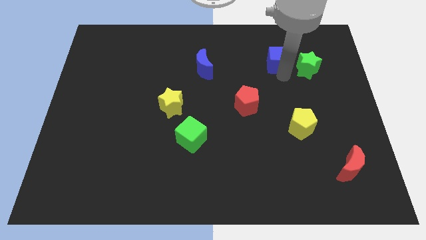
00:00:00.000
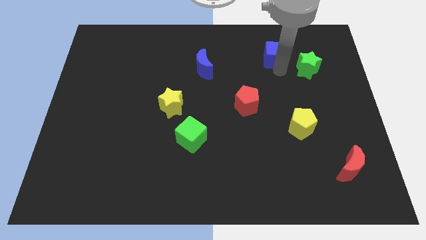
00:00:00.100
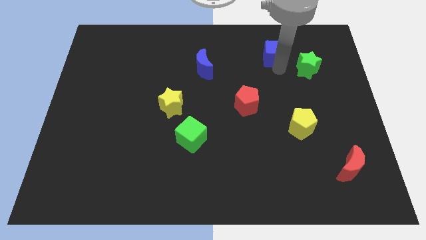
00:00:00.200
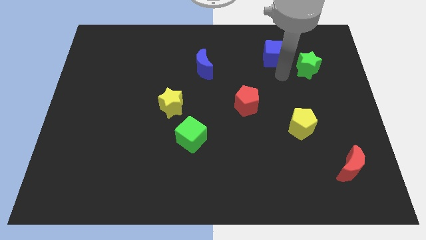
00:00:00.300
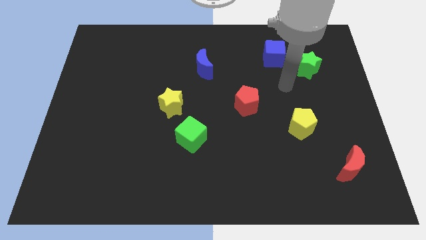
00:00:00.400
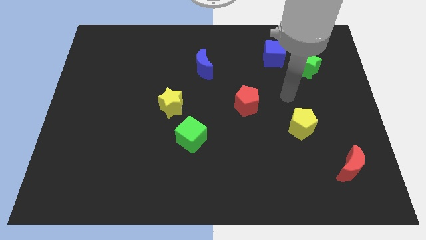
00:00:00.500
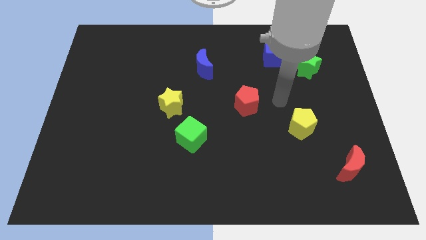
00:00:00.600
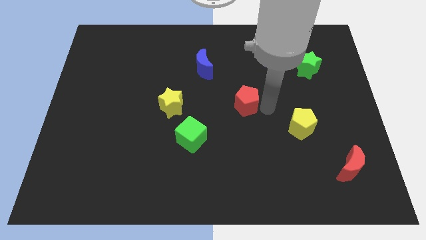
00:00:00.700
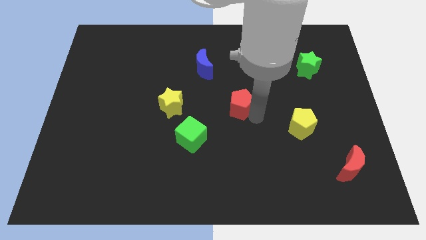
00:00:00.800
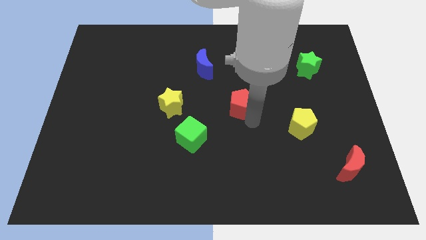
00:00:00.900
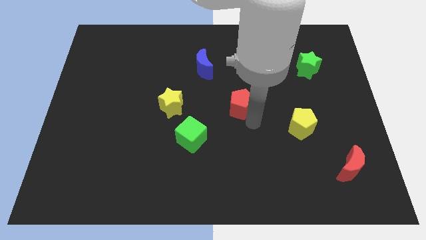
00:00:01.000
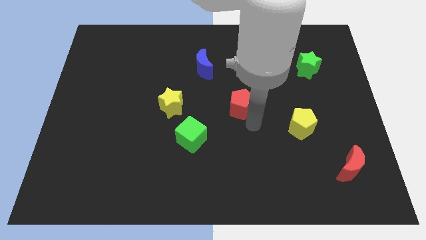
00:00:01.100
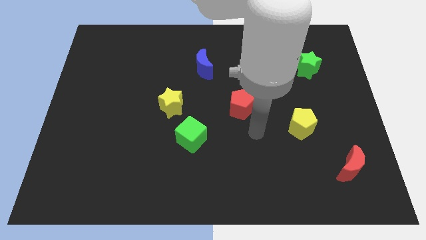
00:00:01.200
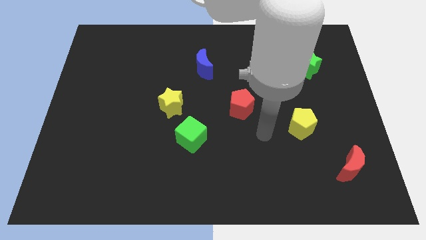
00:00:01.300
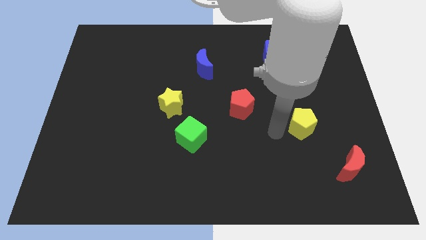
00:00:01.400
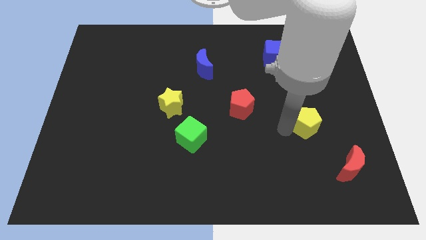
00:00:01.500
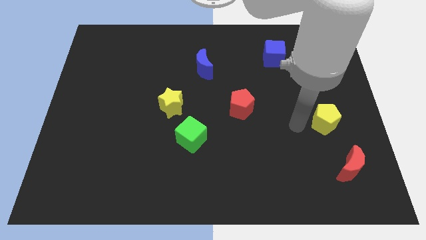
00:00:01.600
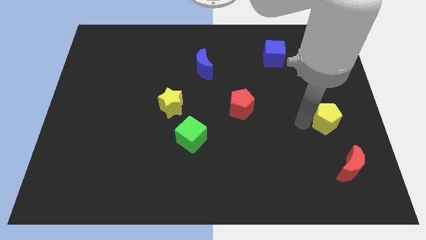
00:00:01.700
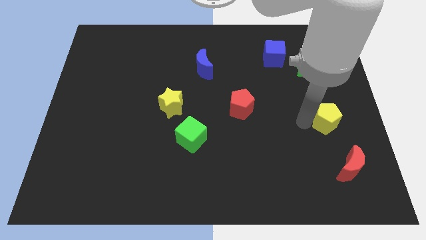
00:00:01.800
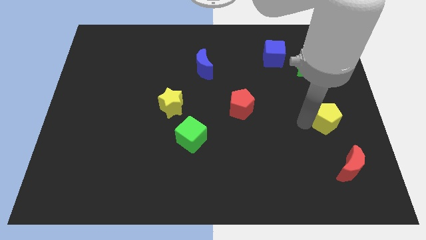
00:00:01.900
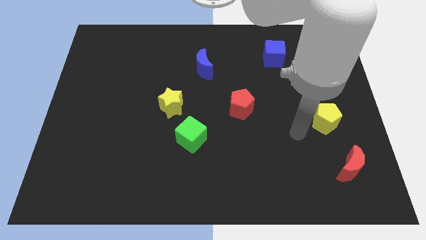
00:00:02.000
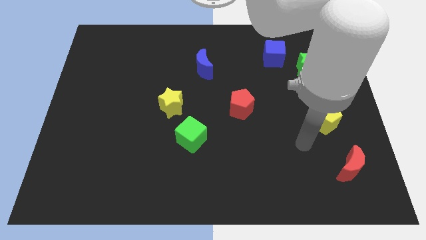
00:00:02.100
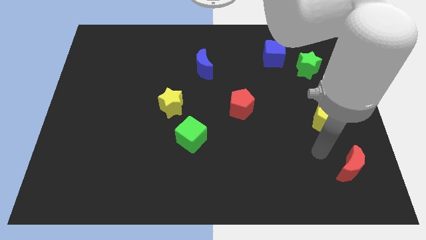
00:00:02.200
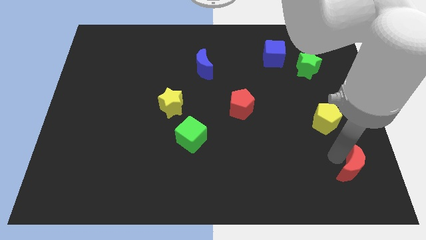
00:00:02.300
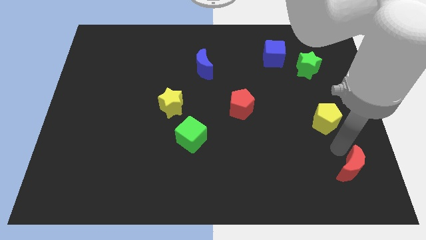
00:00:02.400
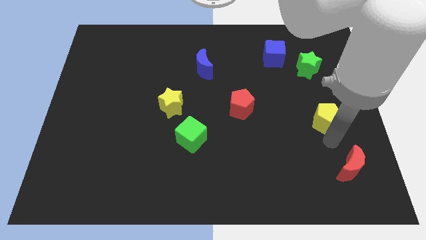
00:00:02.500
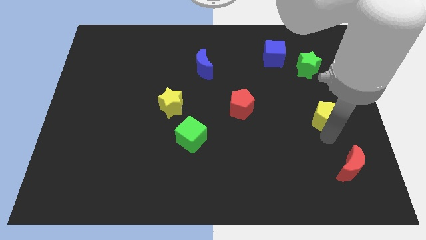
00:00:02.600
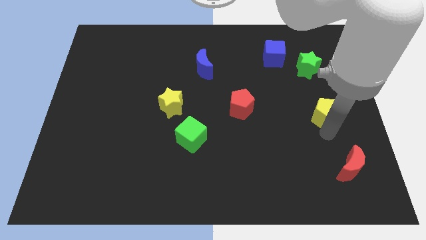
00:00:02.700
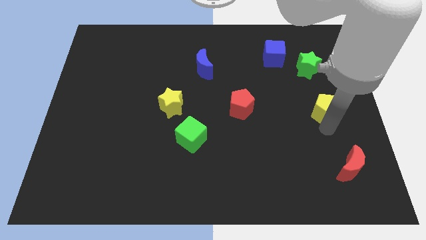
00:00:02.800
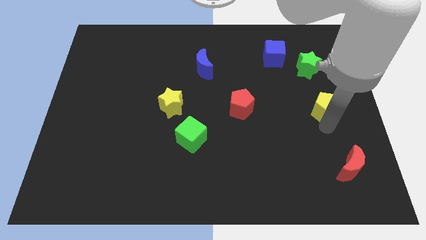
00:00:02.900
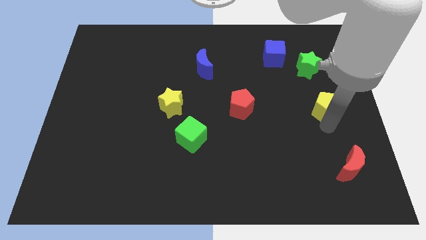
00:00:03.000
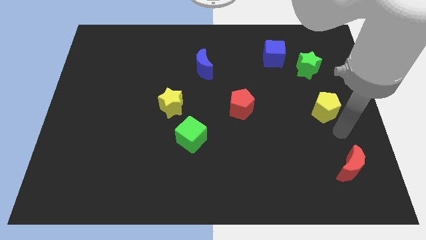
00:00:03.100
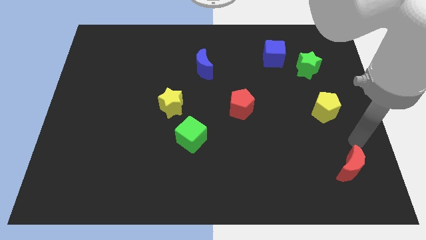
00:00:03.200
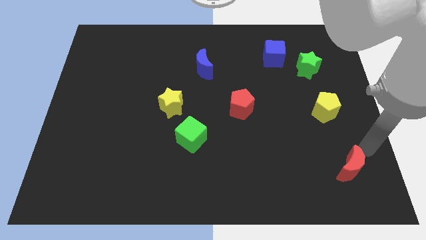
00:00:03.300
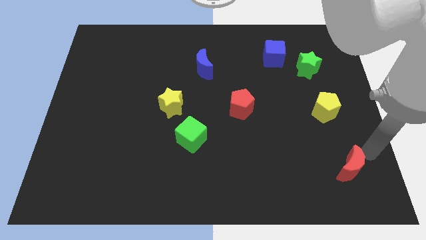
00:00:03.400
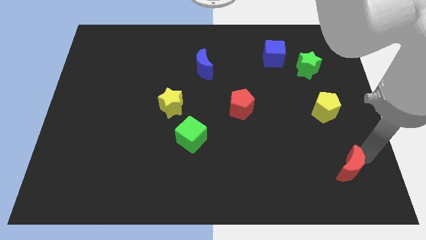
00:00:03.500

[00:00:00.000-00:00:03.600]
place yellow pentagon to the bottom right of green star

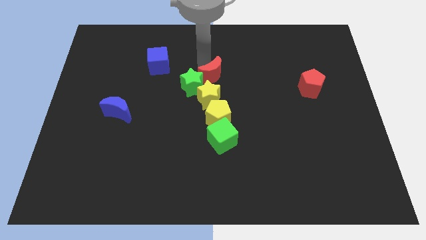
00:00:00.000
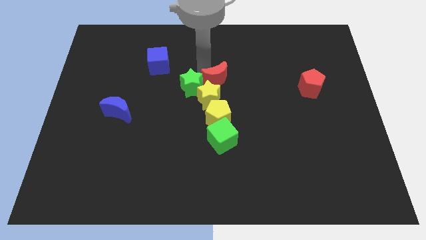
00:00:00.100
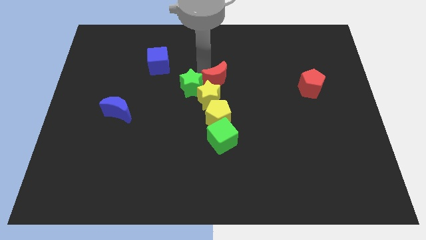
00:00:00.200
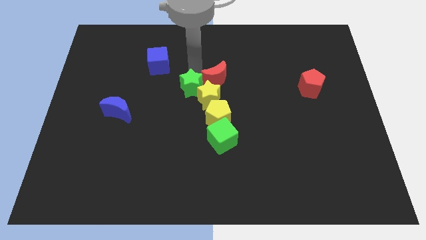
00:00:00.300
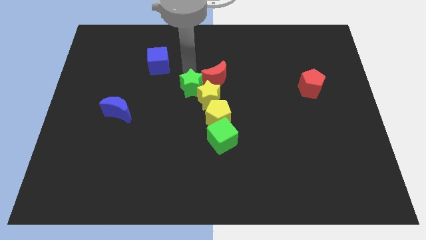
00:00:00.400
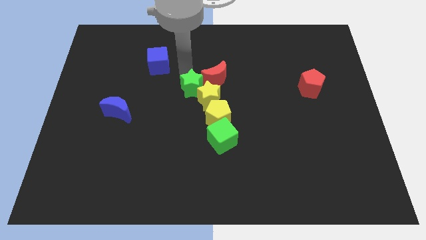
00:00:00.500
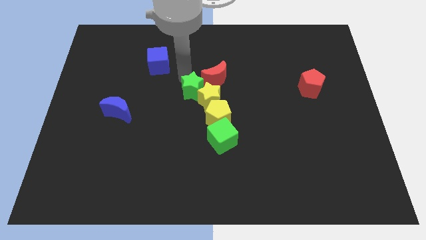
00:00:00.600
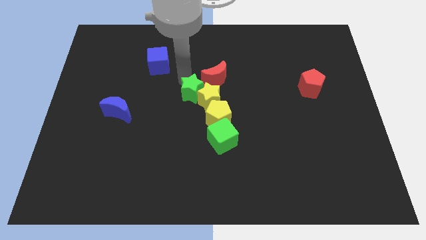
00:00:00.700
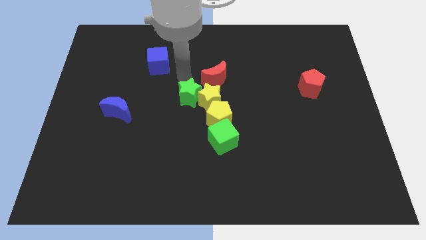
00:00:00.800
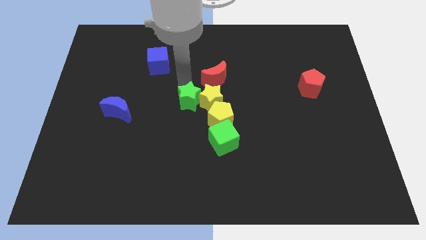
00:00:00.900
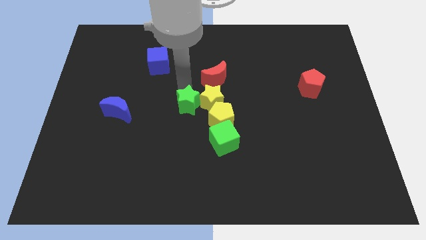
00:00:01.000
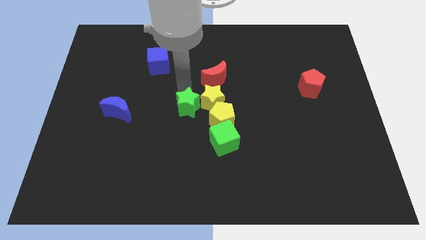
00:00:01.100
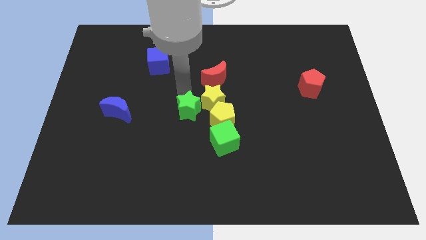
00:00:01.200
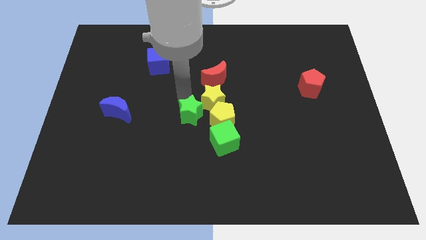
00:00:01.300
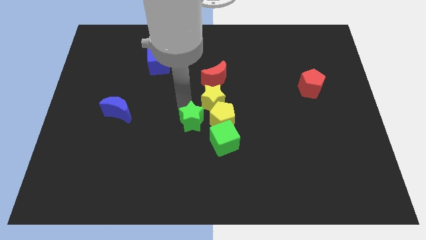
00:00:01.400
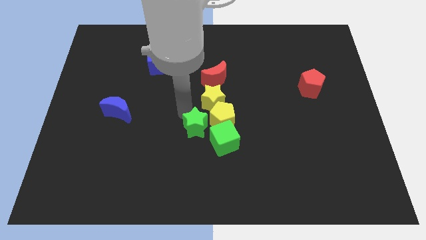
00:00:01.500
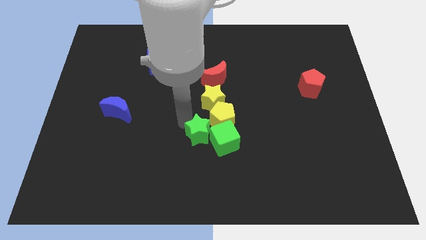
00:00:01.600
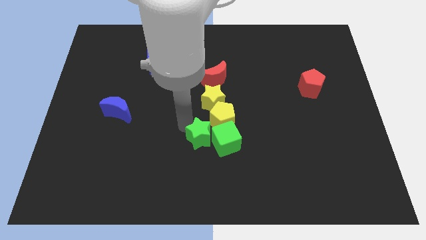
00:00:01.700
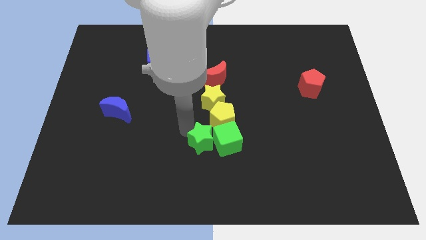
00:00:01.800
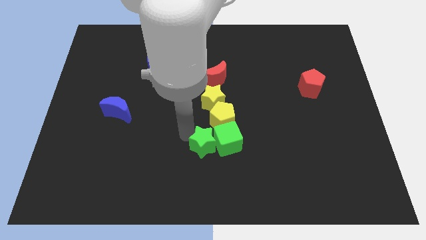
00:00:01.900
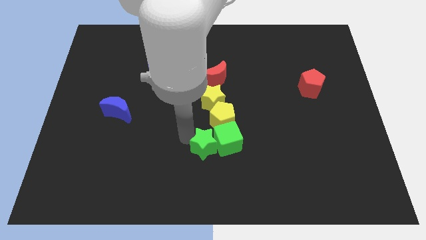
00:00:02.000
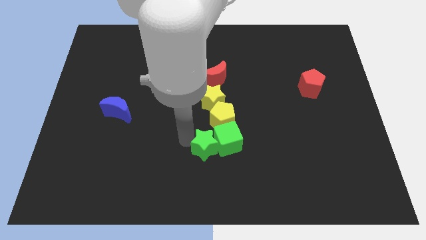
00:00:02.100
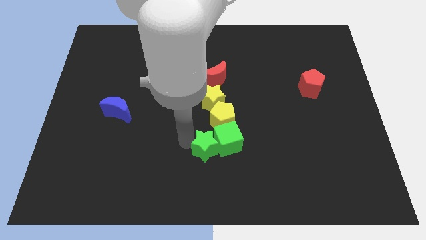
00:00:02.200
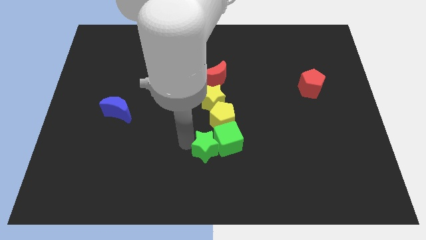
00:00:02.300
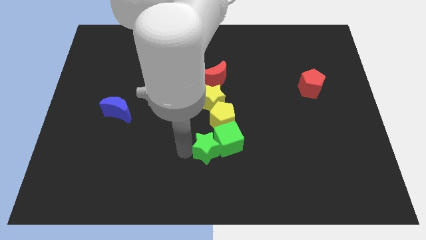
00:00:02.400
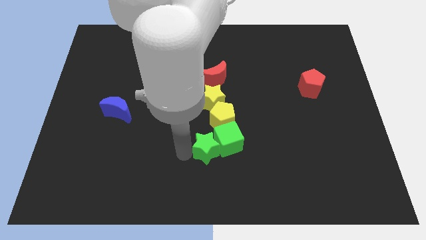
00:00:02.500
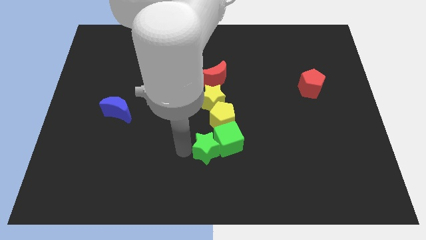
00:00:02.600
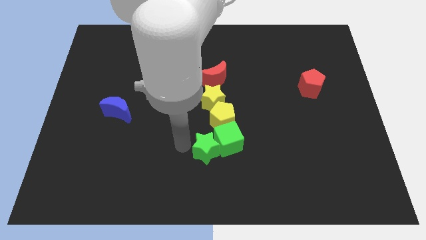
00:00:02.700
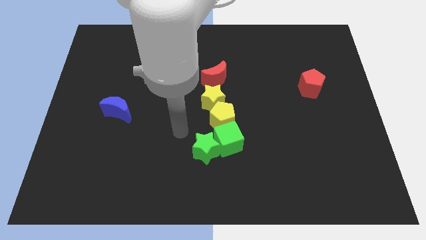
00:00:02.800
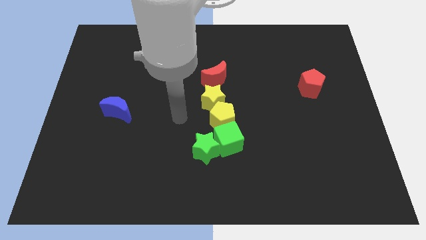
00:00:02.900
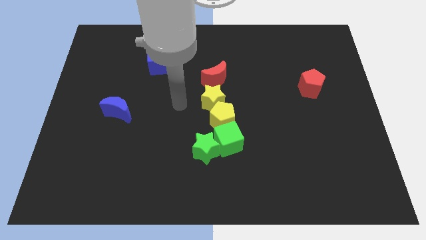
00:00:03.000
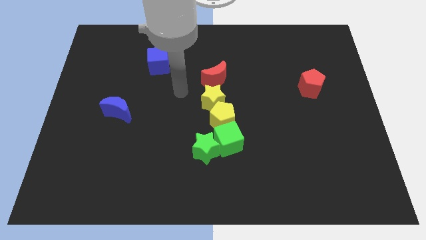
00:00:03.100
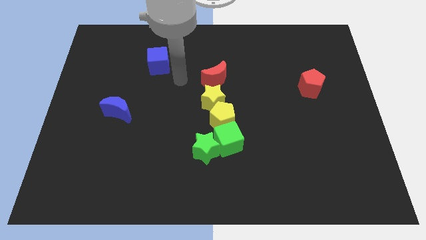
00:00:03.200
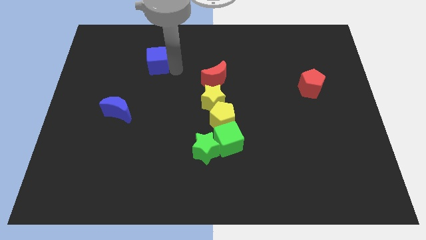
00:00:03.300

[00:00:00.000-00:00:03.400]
move the green star left beside the green cube

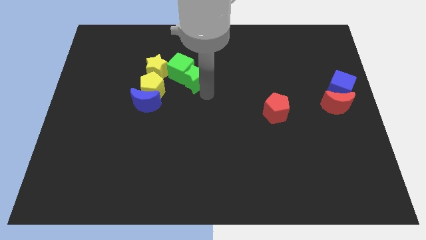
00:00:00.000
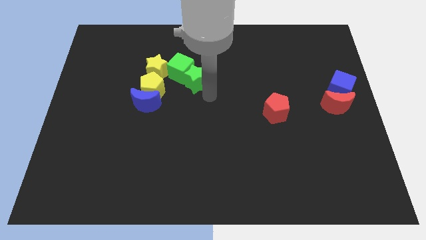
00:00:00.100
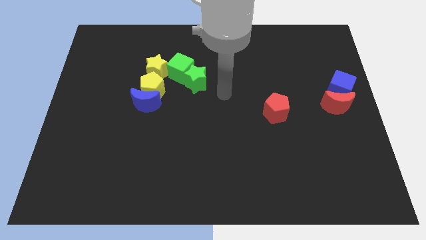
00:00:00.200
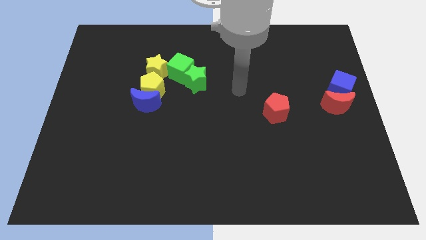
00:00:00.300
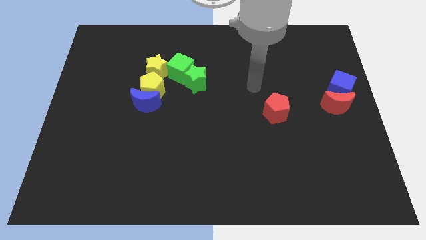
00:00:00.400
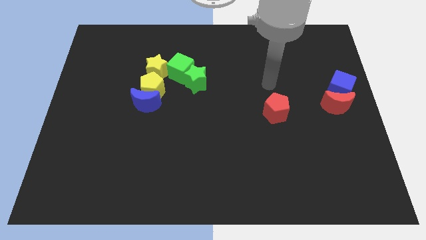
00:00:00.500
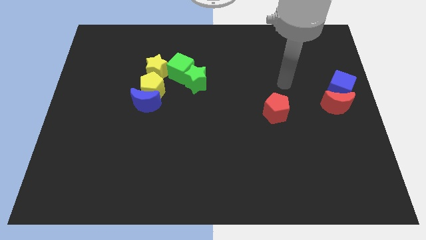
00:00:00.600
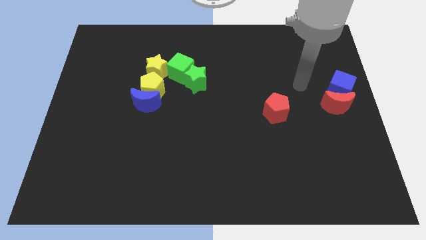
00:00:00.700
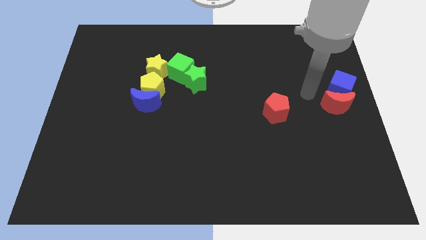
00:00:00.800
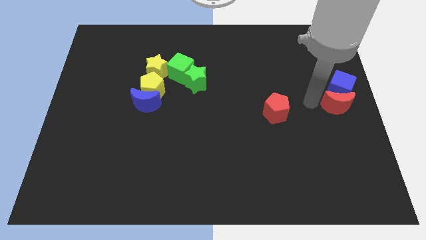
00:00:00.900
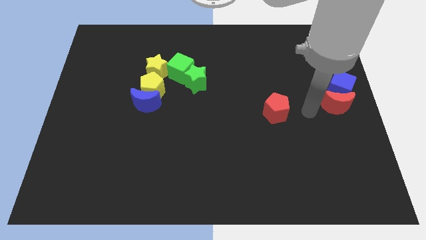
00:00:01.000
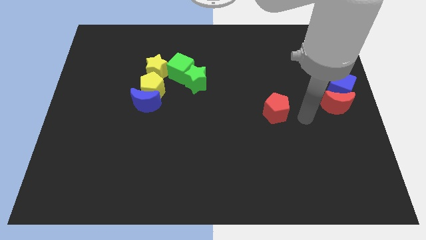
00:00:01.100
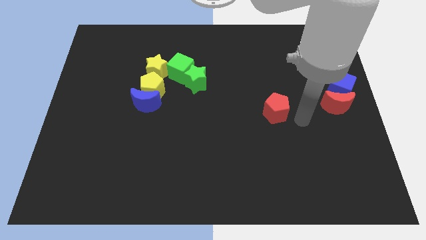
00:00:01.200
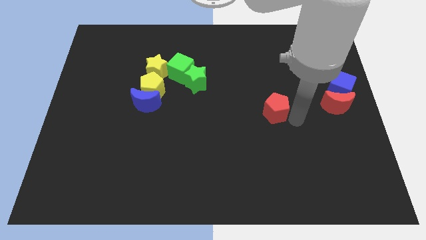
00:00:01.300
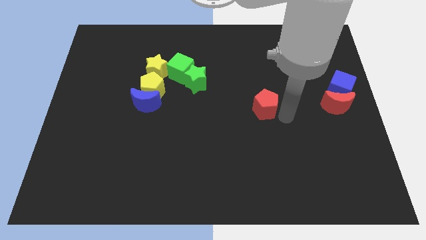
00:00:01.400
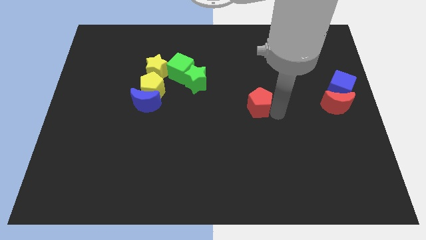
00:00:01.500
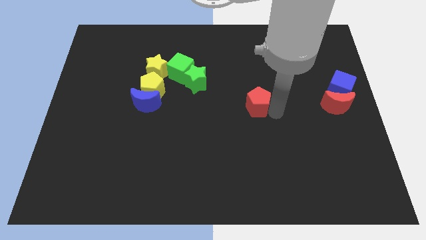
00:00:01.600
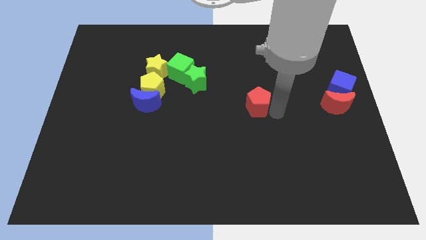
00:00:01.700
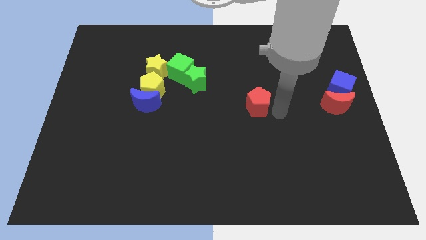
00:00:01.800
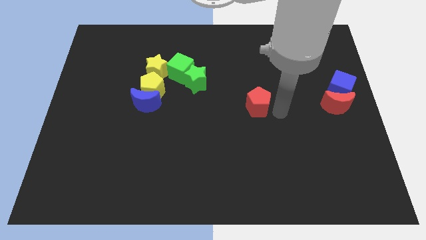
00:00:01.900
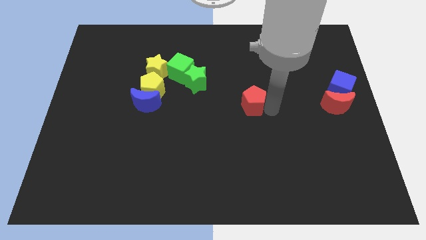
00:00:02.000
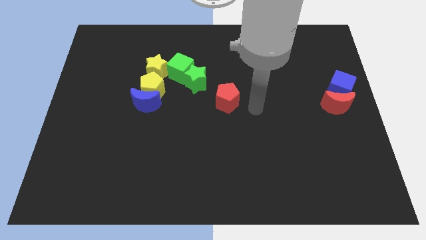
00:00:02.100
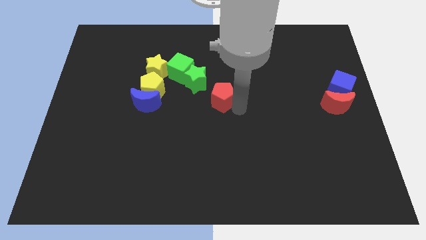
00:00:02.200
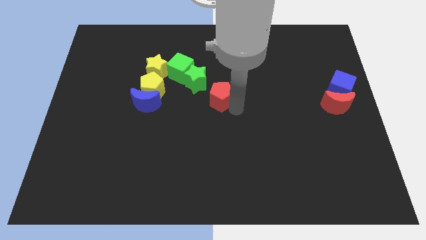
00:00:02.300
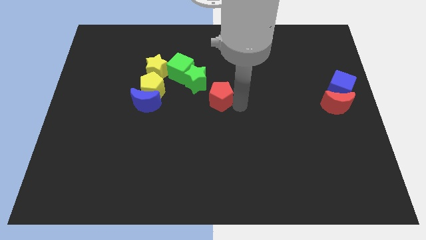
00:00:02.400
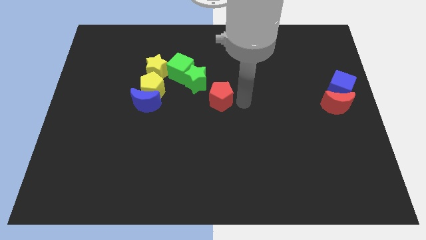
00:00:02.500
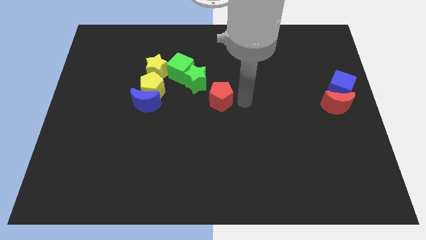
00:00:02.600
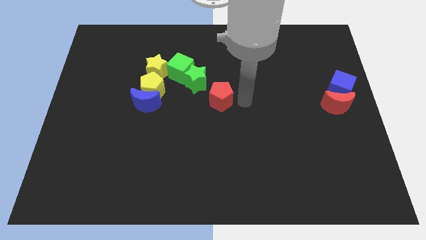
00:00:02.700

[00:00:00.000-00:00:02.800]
put the red pentagon parallel to the blue crescent
